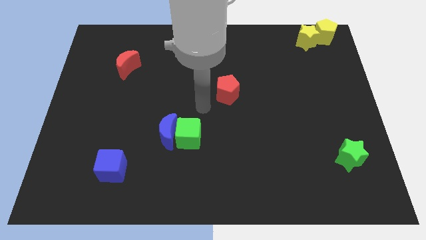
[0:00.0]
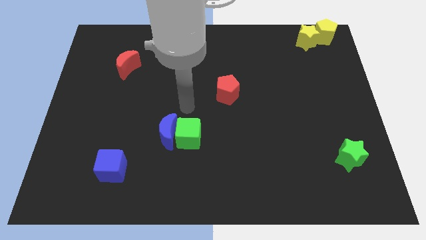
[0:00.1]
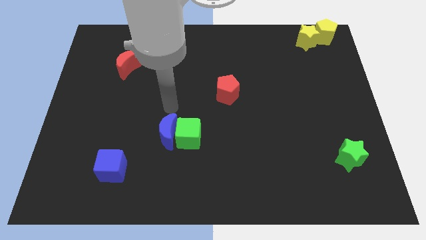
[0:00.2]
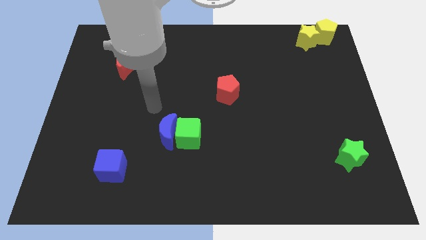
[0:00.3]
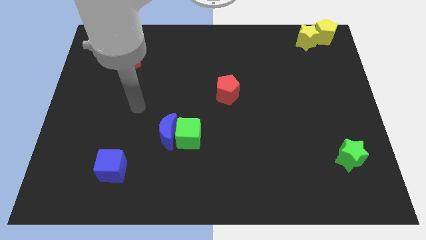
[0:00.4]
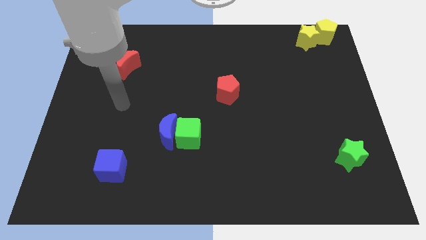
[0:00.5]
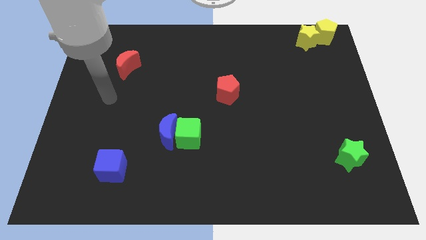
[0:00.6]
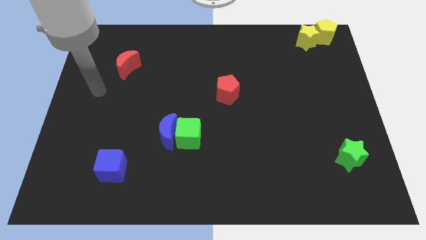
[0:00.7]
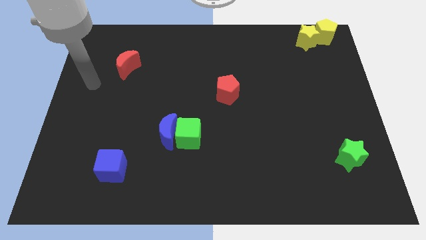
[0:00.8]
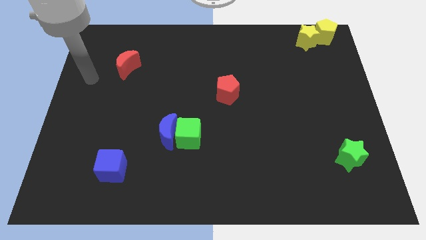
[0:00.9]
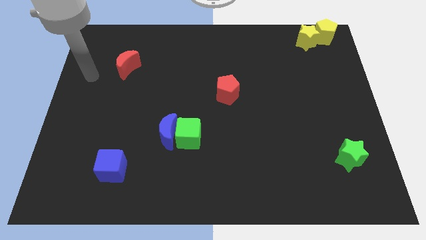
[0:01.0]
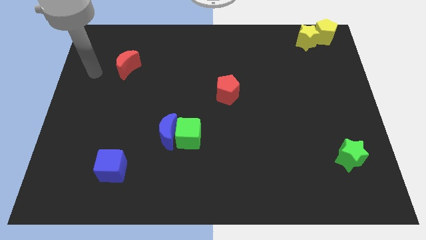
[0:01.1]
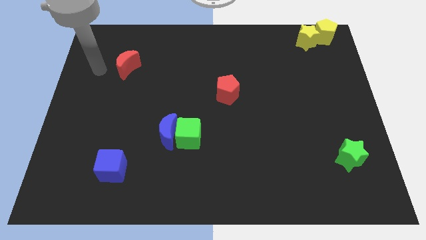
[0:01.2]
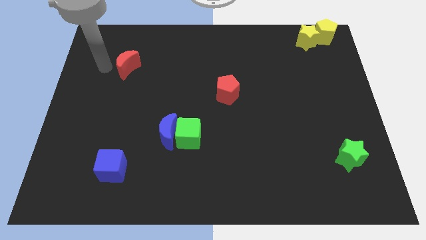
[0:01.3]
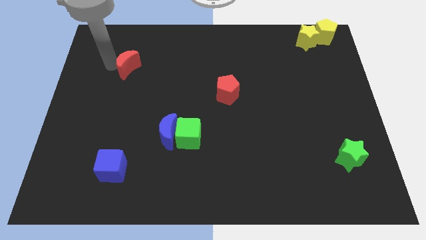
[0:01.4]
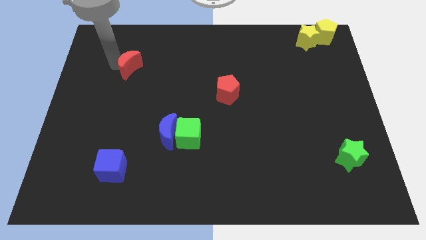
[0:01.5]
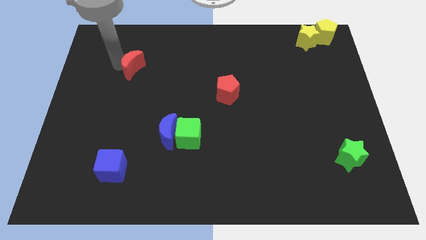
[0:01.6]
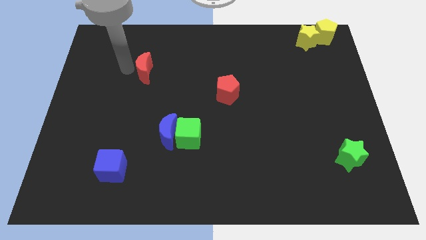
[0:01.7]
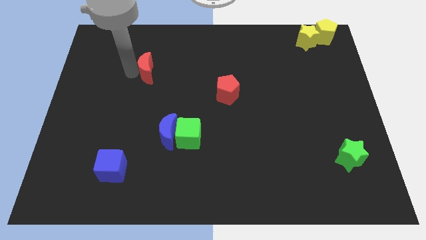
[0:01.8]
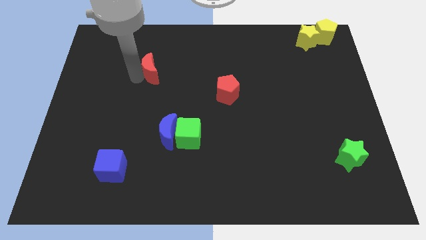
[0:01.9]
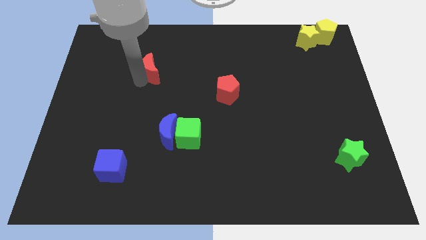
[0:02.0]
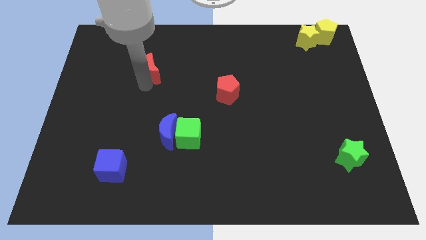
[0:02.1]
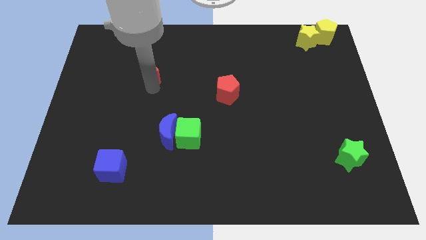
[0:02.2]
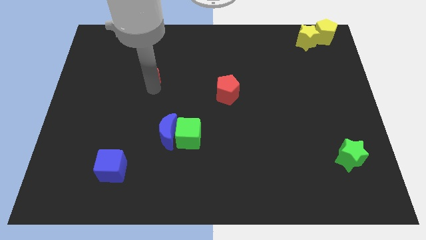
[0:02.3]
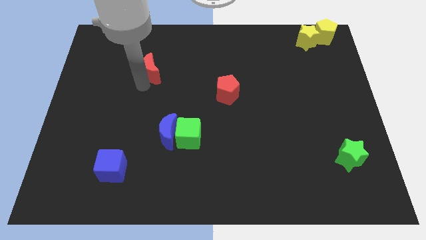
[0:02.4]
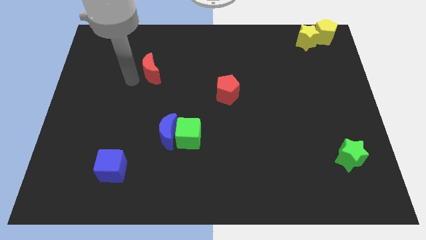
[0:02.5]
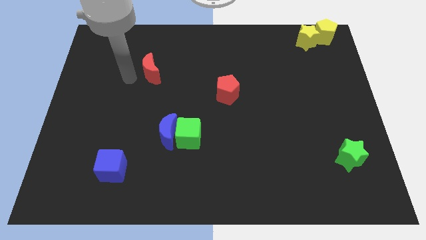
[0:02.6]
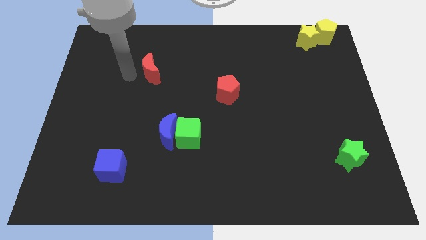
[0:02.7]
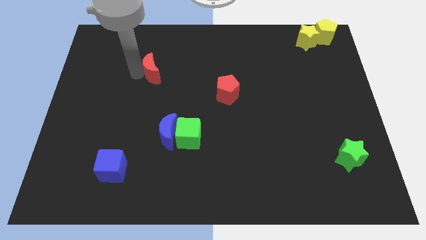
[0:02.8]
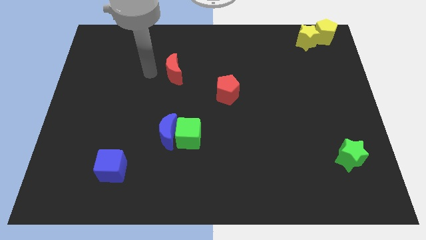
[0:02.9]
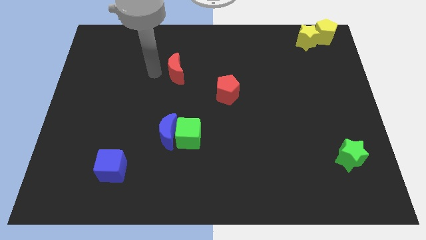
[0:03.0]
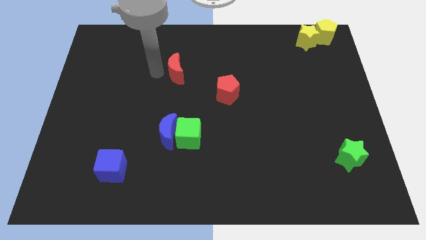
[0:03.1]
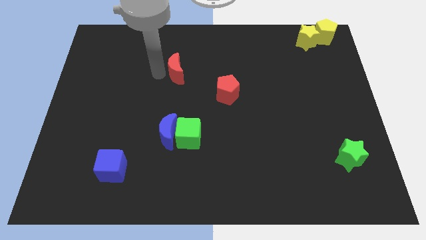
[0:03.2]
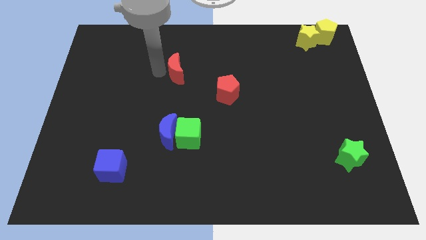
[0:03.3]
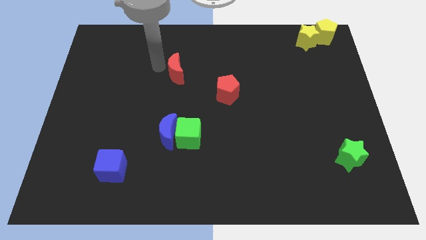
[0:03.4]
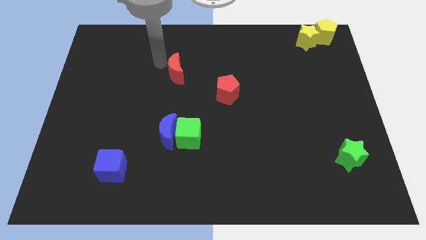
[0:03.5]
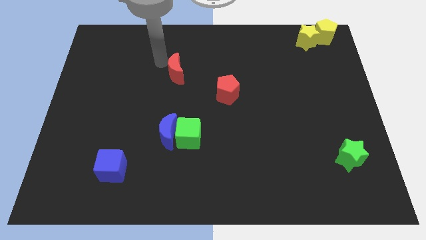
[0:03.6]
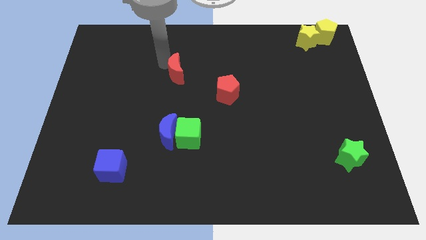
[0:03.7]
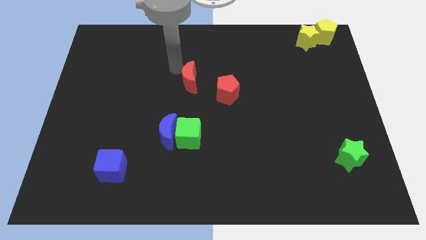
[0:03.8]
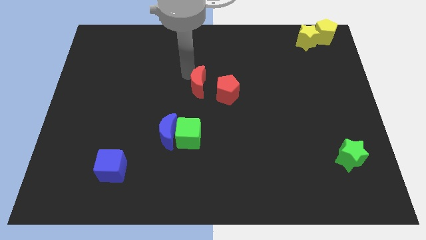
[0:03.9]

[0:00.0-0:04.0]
place the red crescent above the green cube

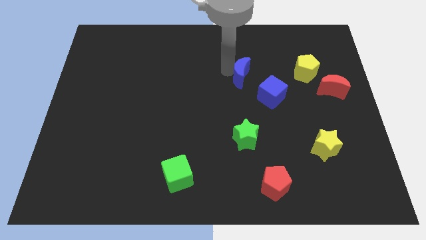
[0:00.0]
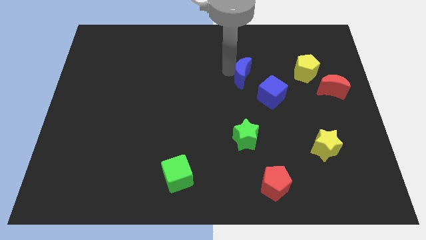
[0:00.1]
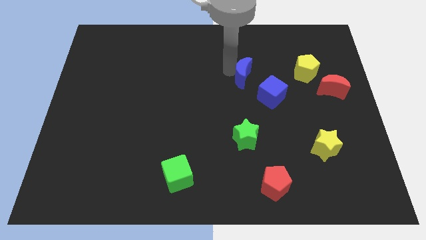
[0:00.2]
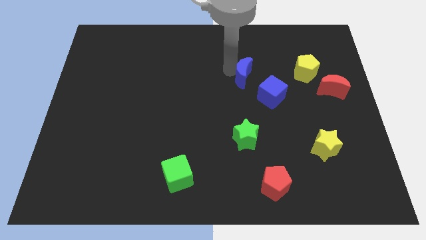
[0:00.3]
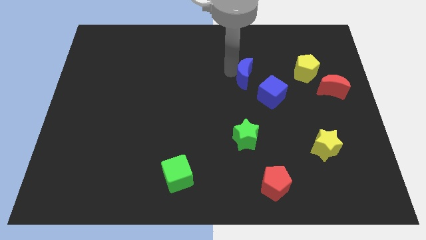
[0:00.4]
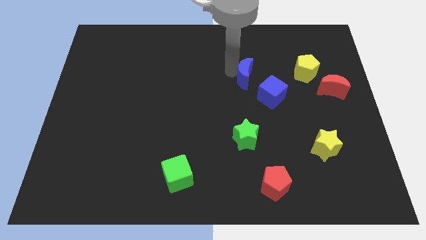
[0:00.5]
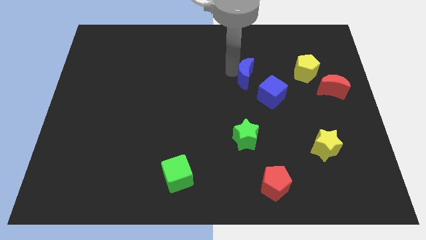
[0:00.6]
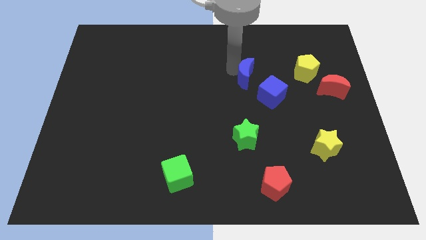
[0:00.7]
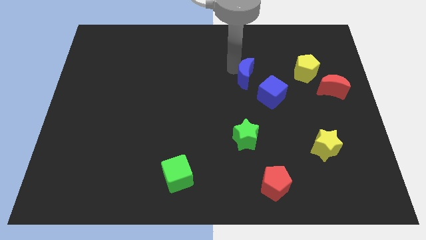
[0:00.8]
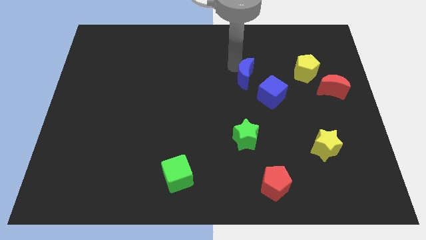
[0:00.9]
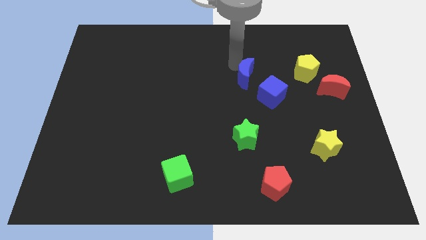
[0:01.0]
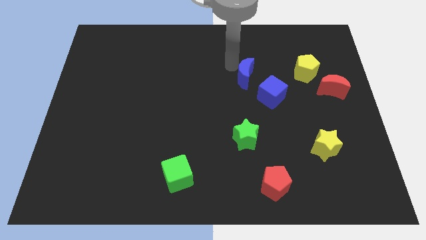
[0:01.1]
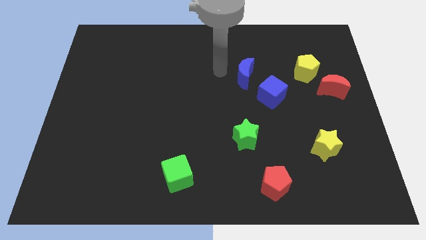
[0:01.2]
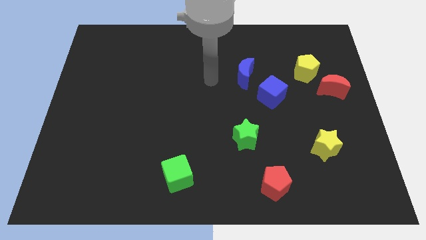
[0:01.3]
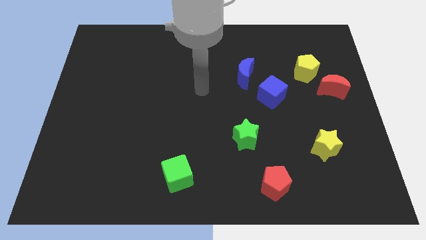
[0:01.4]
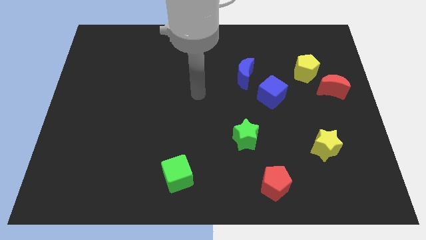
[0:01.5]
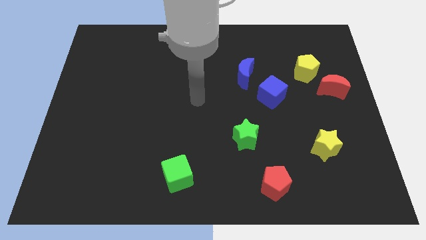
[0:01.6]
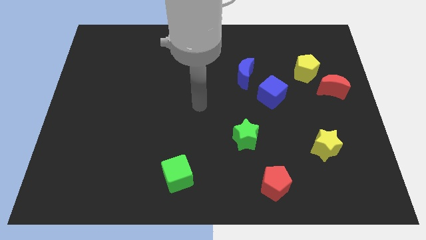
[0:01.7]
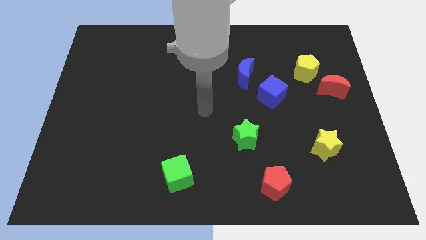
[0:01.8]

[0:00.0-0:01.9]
push the blue crescent to the left of the yellow pentagon

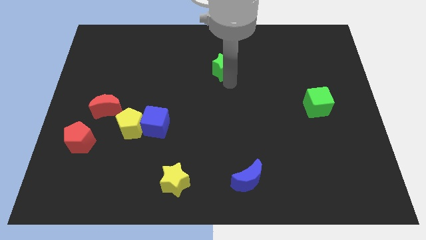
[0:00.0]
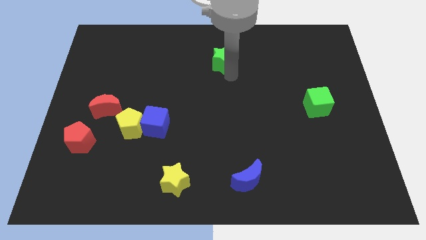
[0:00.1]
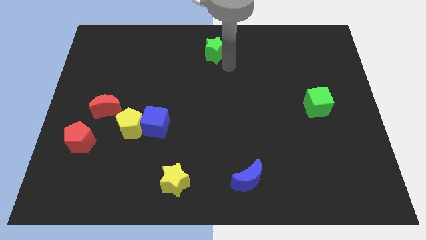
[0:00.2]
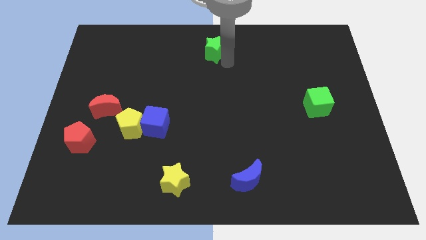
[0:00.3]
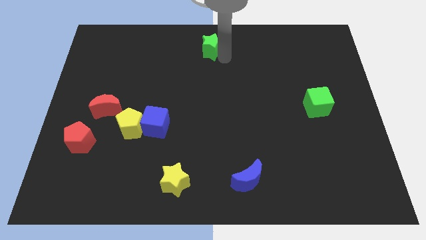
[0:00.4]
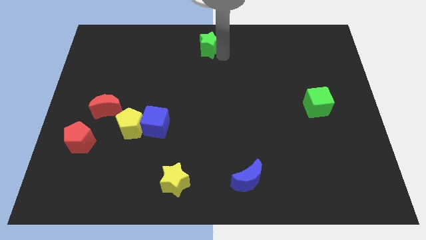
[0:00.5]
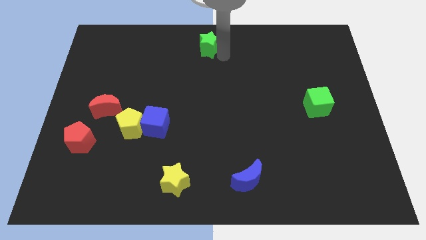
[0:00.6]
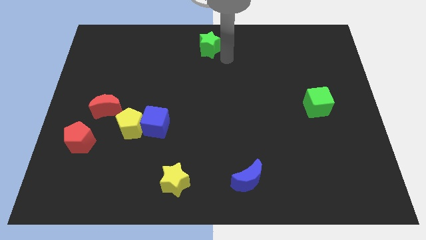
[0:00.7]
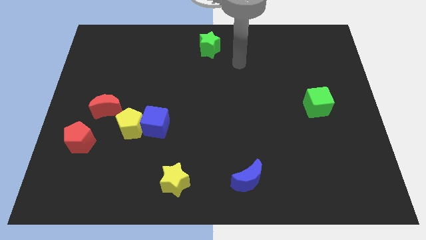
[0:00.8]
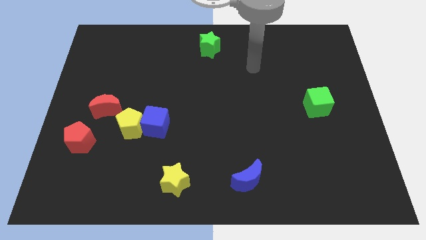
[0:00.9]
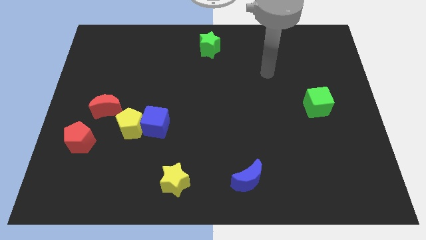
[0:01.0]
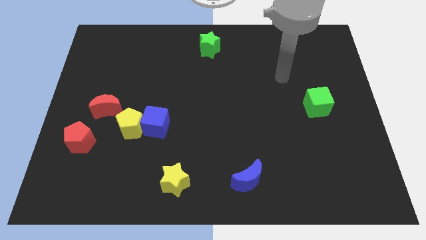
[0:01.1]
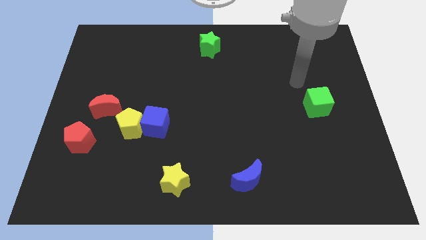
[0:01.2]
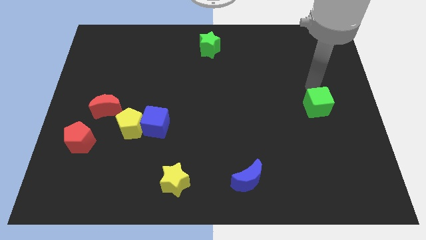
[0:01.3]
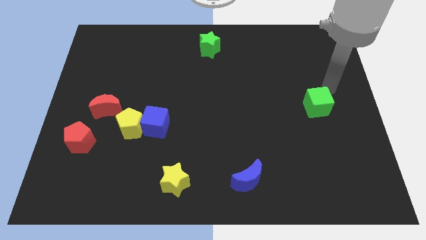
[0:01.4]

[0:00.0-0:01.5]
move the green star slightly upwards

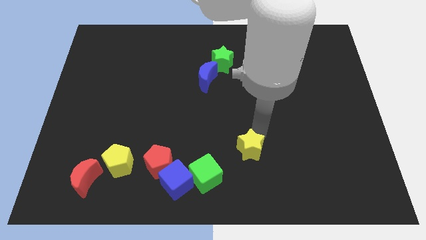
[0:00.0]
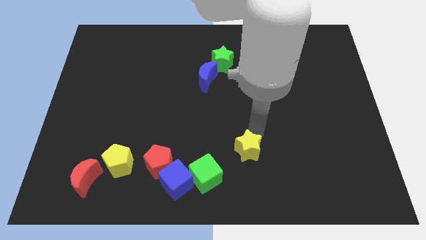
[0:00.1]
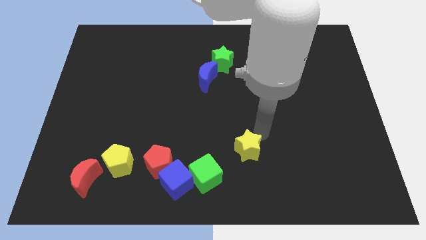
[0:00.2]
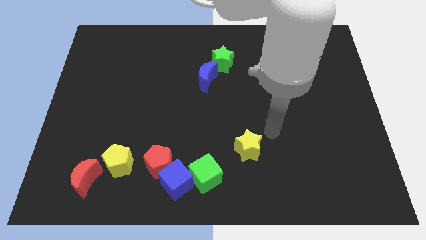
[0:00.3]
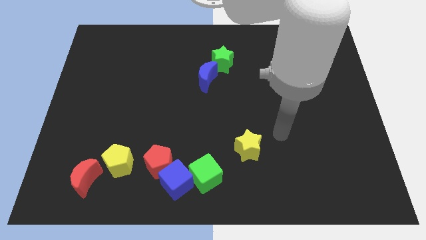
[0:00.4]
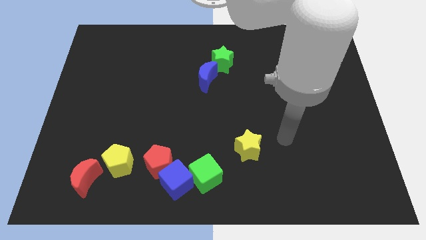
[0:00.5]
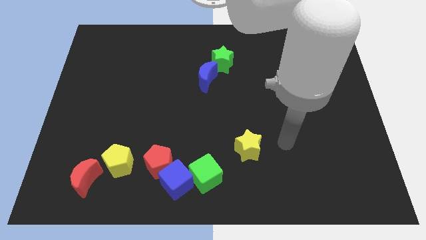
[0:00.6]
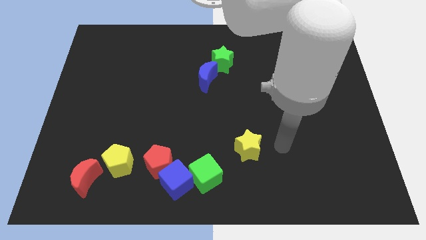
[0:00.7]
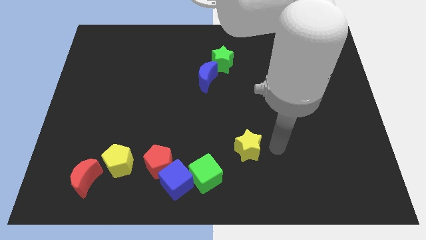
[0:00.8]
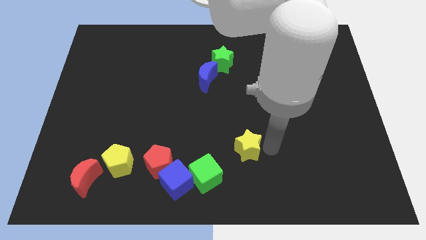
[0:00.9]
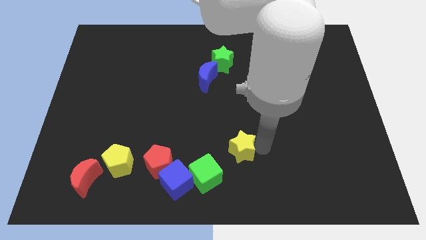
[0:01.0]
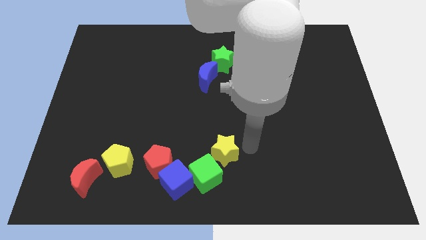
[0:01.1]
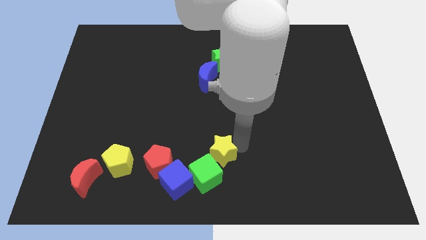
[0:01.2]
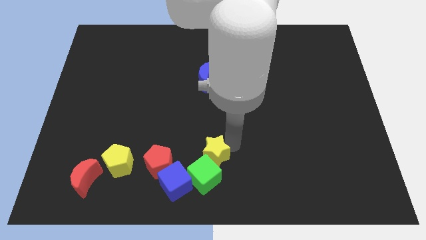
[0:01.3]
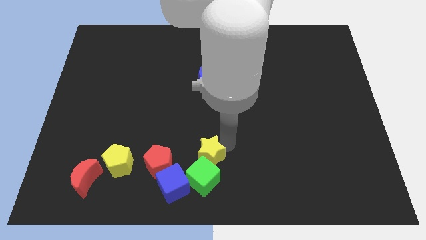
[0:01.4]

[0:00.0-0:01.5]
push the yellow star into the green cube
